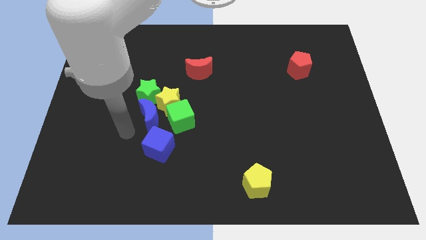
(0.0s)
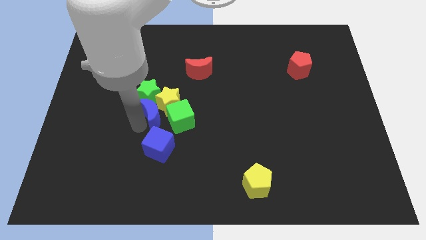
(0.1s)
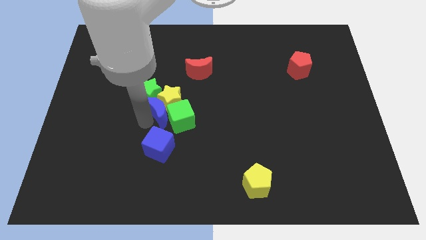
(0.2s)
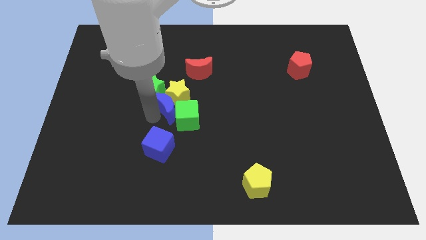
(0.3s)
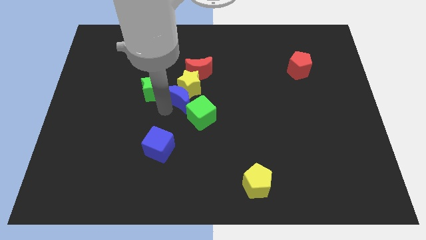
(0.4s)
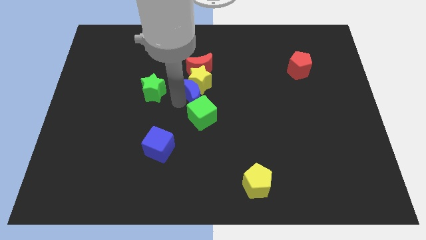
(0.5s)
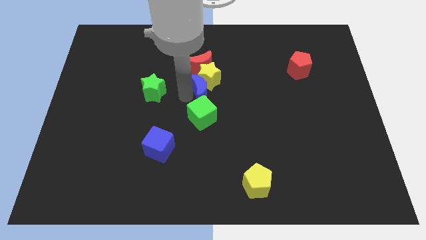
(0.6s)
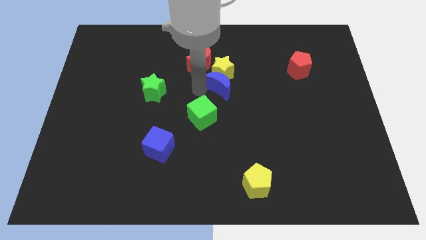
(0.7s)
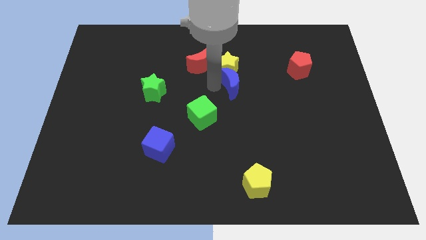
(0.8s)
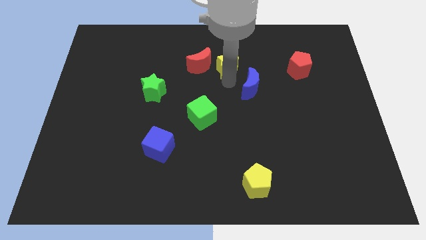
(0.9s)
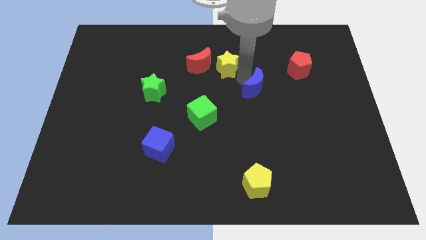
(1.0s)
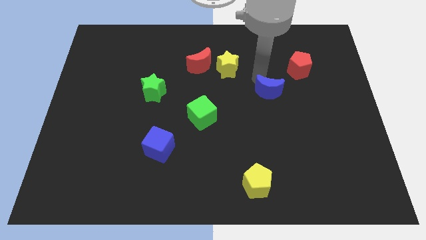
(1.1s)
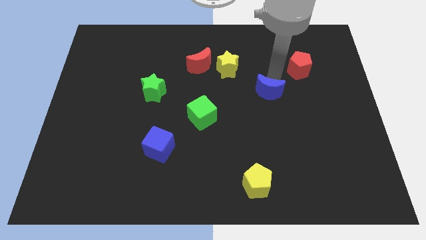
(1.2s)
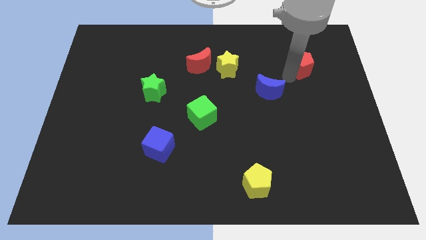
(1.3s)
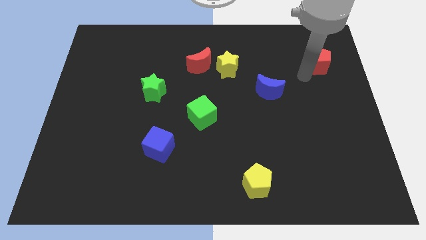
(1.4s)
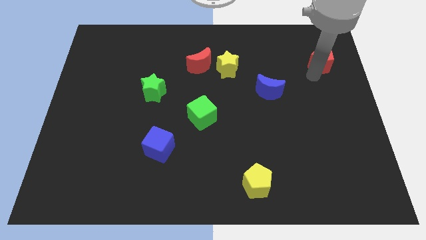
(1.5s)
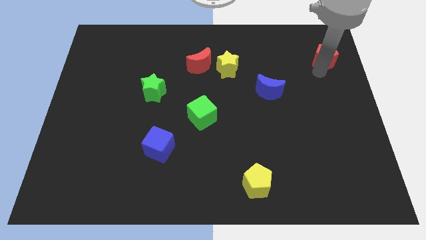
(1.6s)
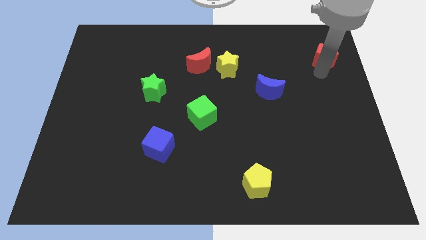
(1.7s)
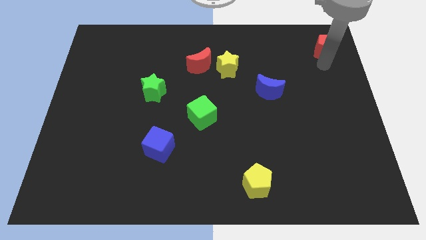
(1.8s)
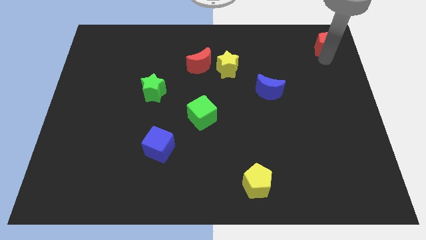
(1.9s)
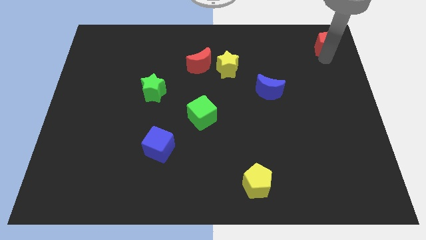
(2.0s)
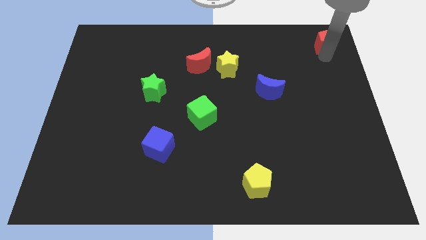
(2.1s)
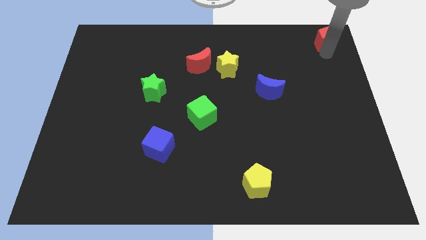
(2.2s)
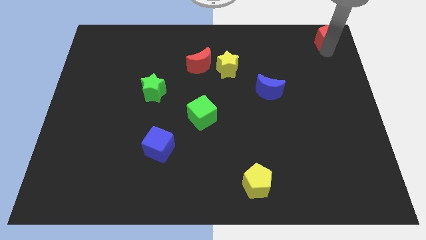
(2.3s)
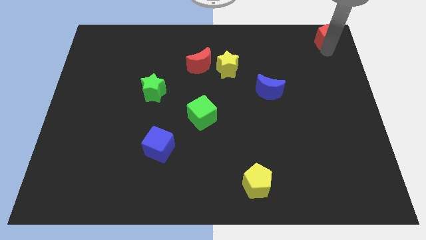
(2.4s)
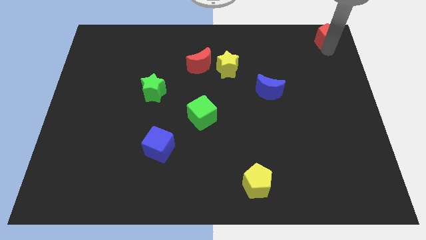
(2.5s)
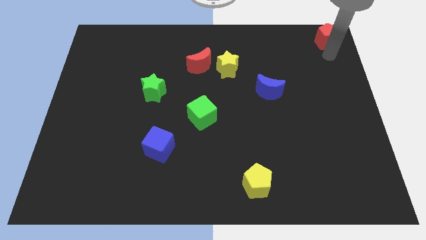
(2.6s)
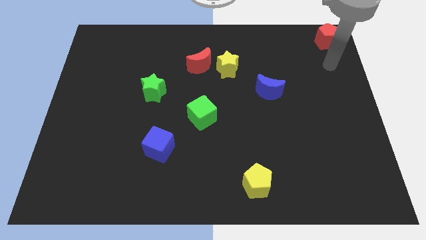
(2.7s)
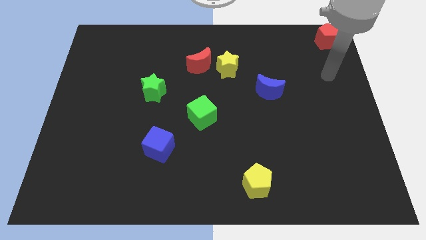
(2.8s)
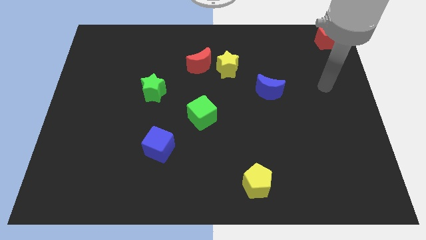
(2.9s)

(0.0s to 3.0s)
place red pentagon towards top right corner

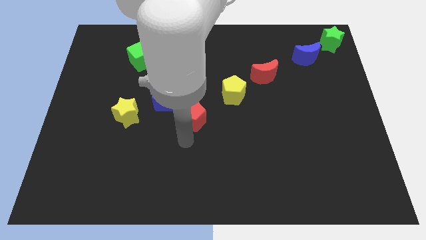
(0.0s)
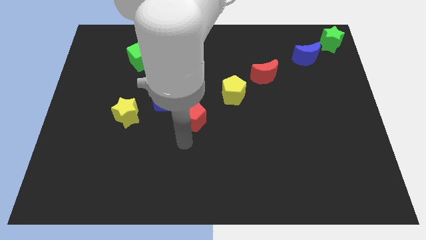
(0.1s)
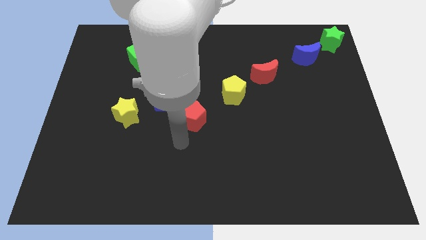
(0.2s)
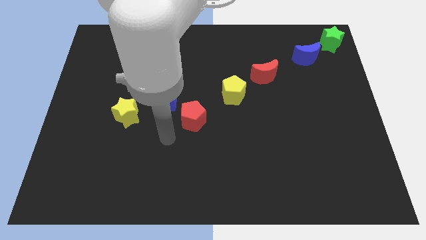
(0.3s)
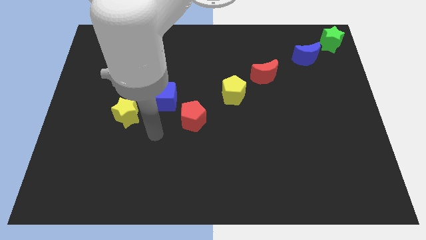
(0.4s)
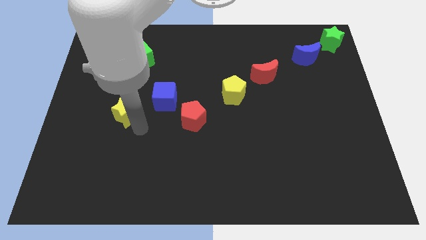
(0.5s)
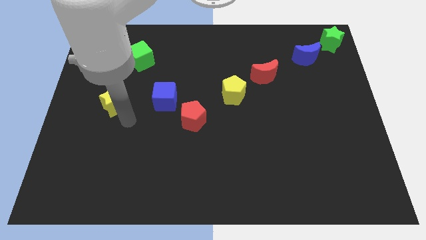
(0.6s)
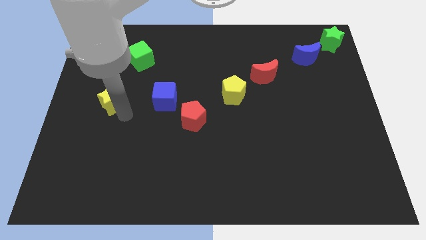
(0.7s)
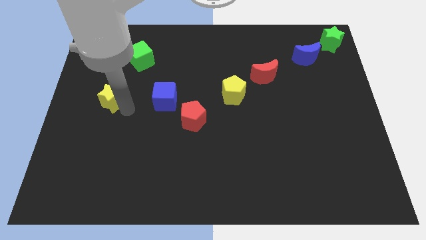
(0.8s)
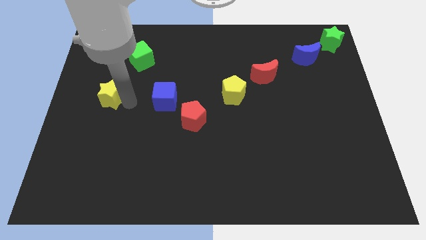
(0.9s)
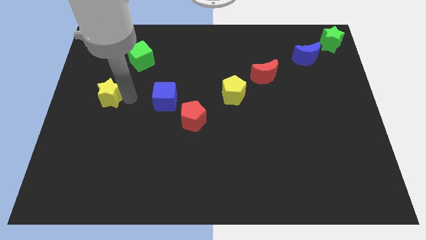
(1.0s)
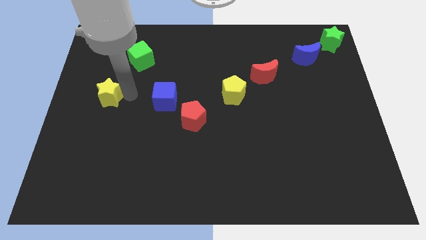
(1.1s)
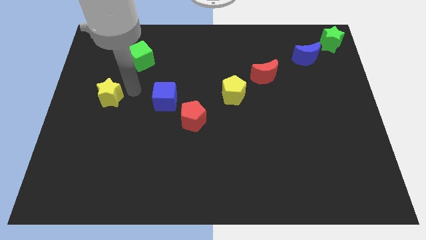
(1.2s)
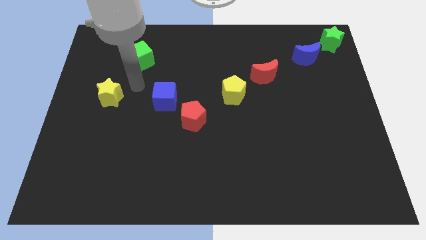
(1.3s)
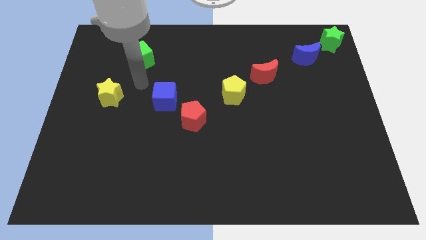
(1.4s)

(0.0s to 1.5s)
move the yellow star slightly to the left center of the board

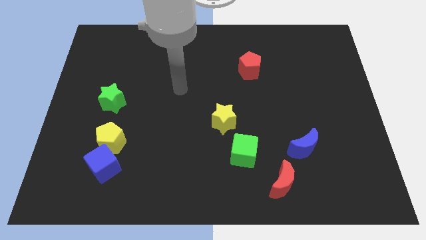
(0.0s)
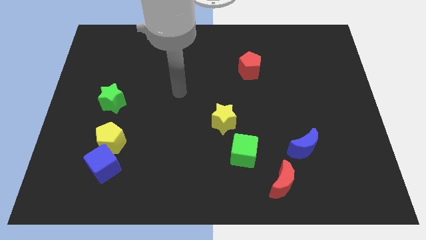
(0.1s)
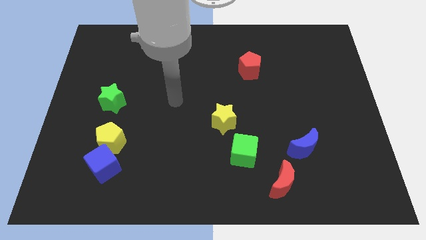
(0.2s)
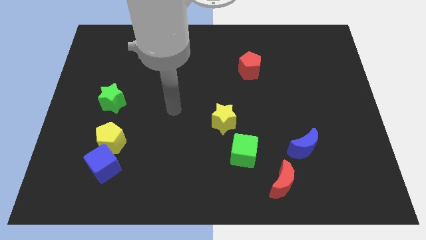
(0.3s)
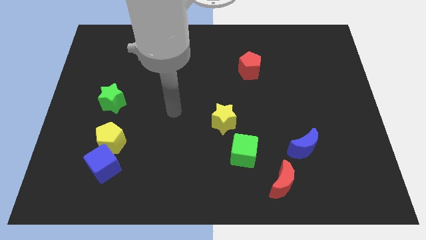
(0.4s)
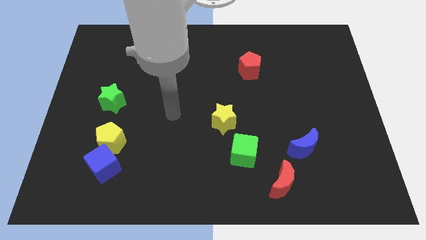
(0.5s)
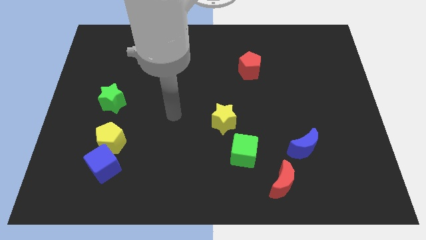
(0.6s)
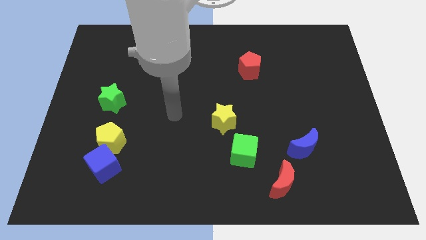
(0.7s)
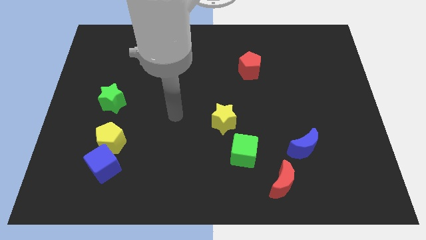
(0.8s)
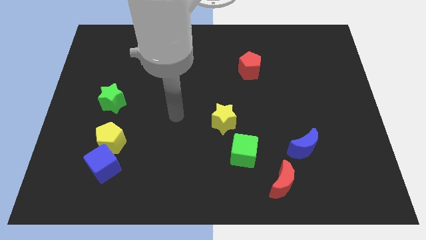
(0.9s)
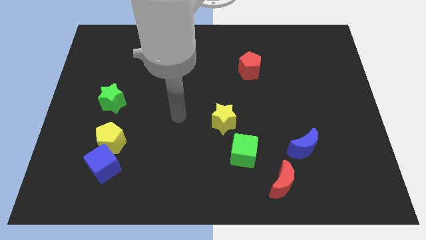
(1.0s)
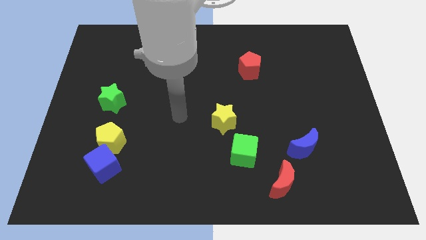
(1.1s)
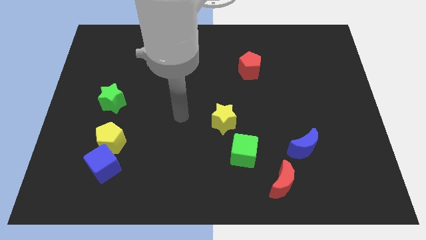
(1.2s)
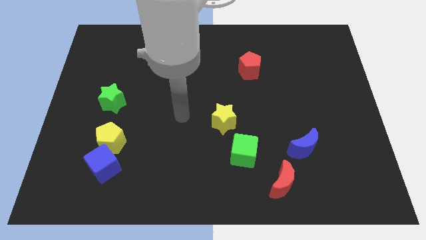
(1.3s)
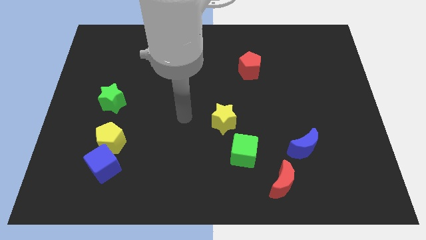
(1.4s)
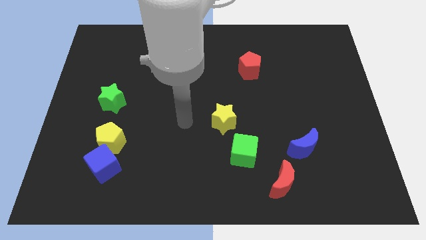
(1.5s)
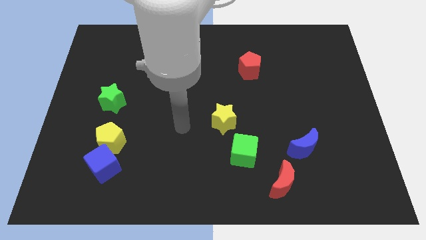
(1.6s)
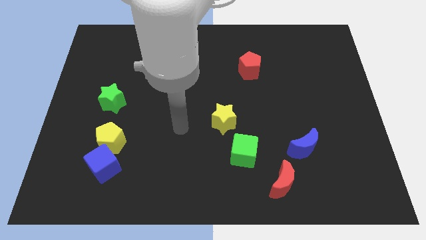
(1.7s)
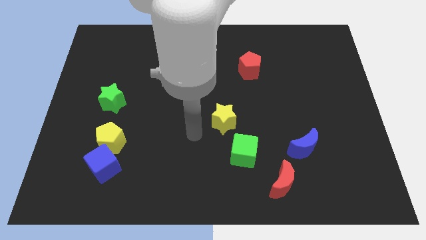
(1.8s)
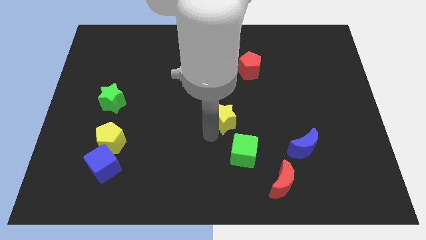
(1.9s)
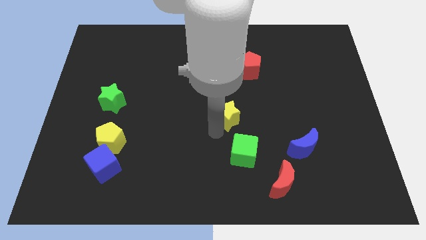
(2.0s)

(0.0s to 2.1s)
tap on the bottom left side of yellow star

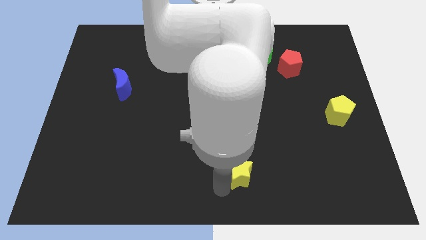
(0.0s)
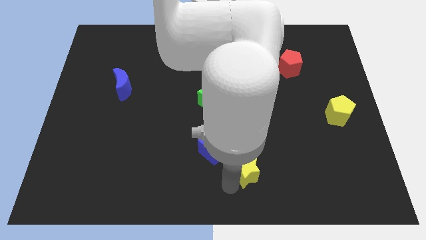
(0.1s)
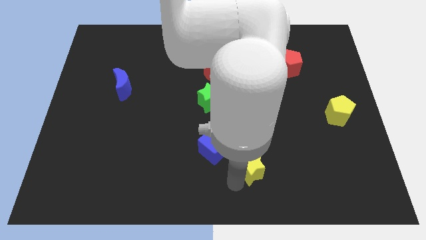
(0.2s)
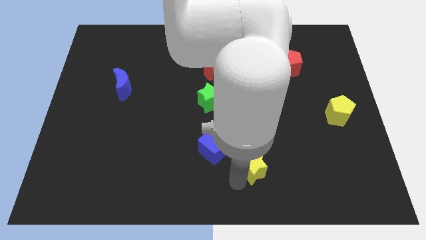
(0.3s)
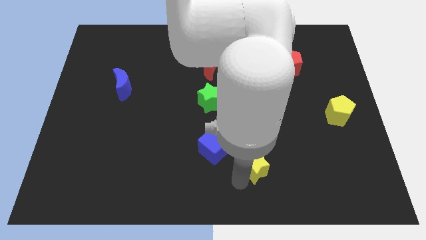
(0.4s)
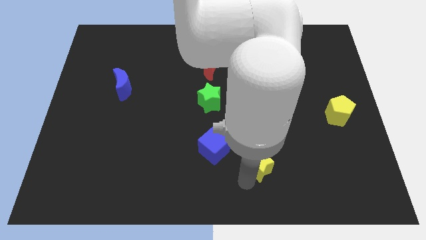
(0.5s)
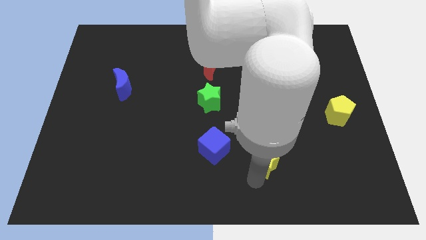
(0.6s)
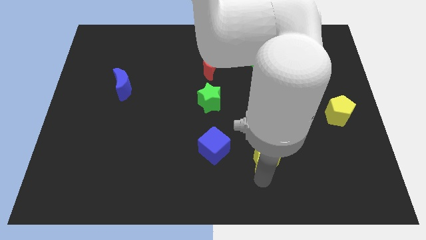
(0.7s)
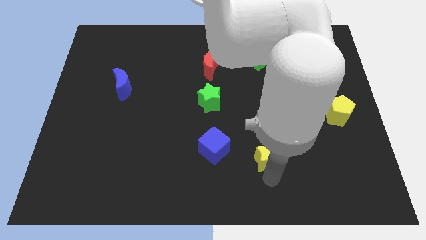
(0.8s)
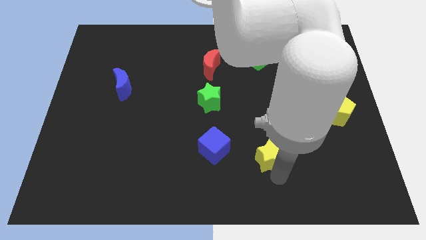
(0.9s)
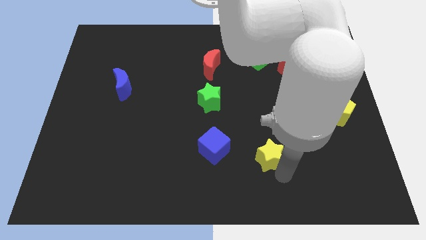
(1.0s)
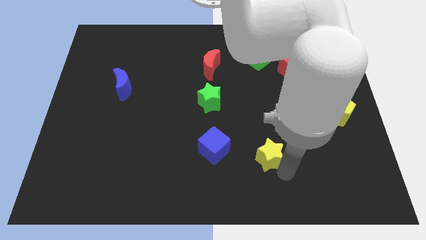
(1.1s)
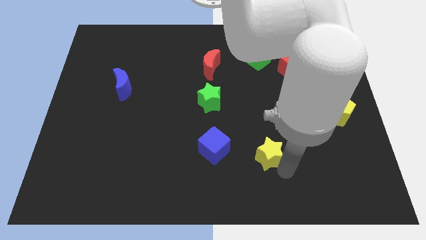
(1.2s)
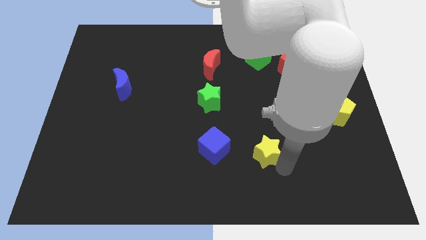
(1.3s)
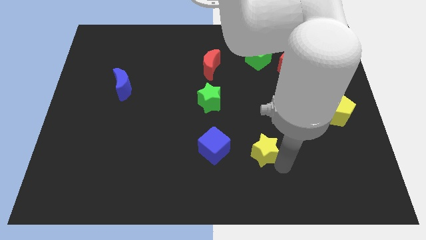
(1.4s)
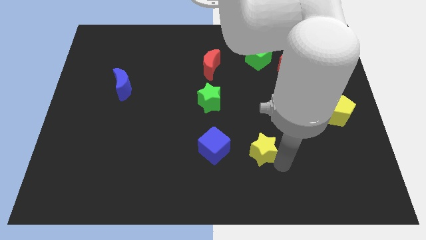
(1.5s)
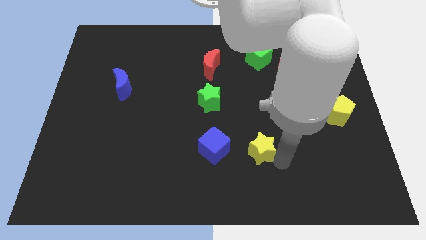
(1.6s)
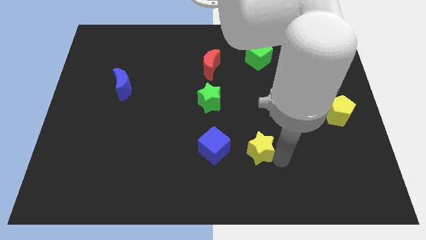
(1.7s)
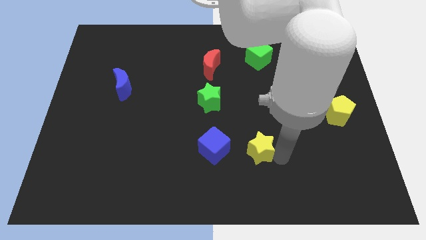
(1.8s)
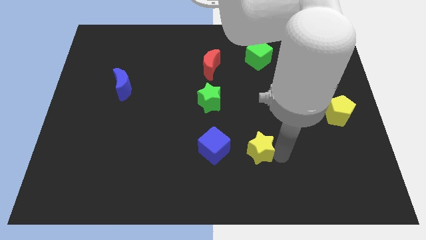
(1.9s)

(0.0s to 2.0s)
push the yellow star to the right of blue cube

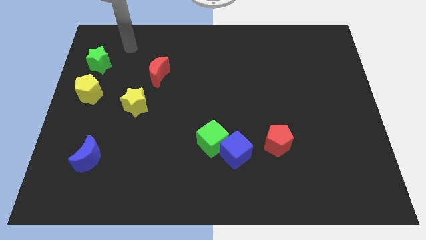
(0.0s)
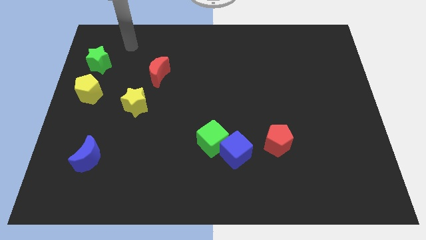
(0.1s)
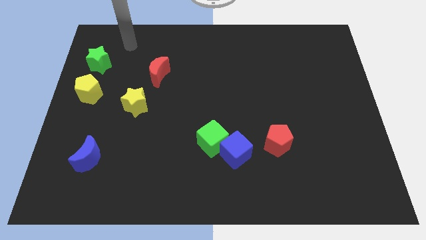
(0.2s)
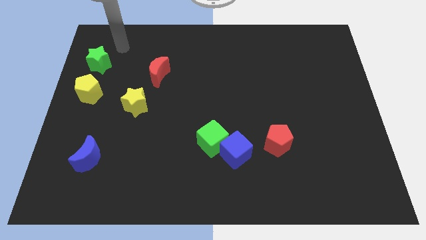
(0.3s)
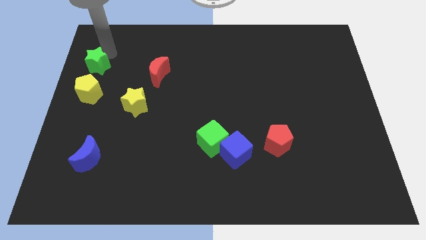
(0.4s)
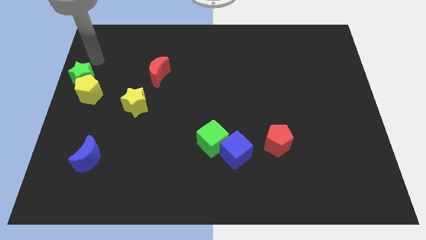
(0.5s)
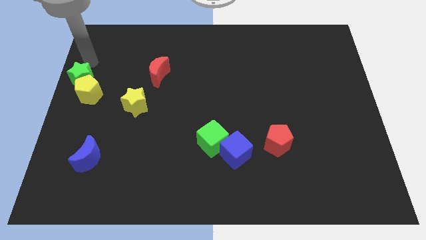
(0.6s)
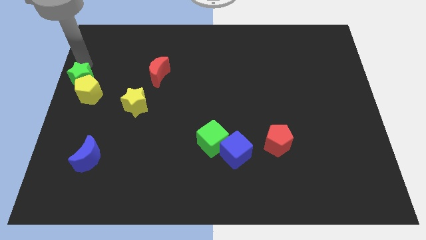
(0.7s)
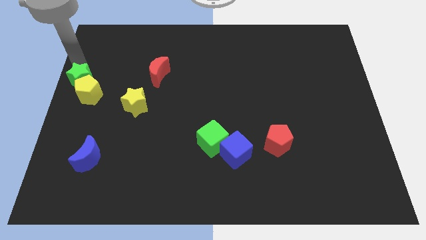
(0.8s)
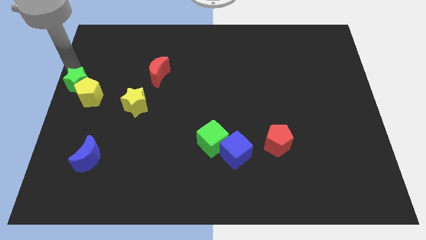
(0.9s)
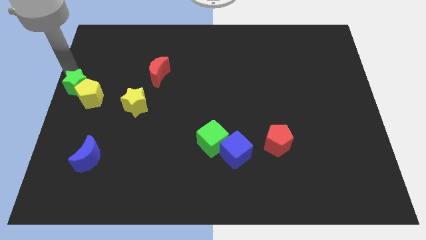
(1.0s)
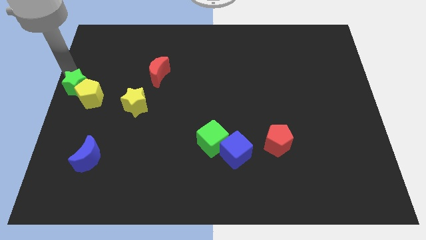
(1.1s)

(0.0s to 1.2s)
push green star in to yellow pentagon
